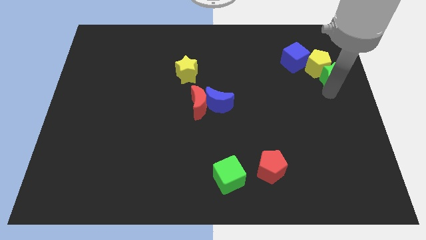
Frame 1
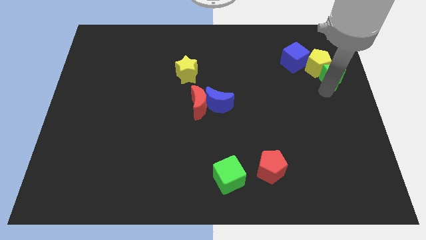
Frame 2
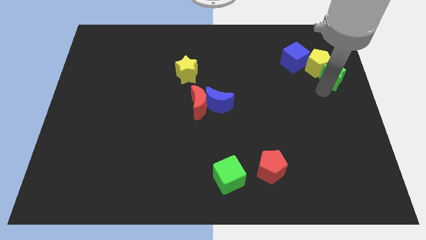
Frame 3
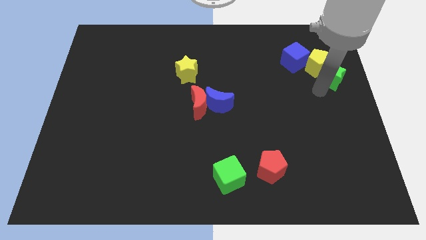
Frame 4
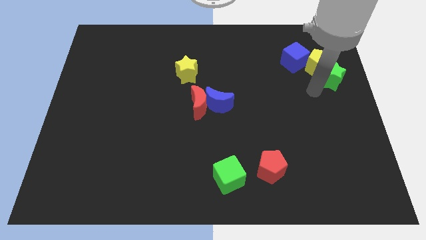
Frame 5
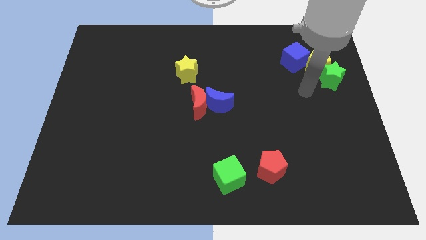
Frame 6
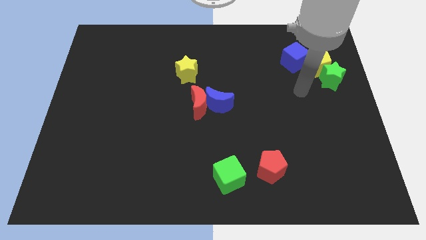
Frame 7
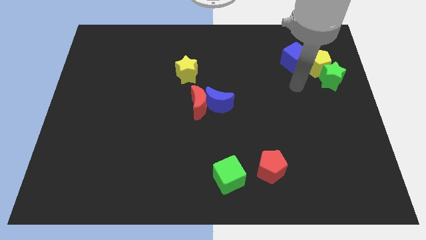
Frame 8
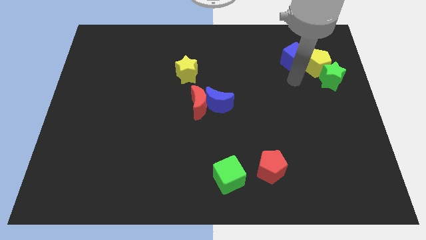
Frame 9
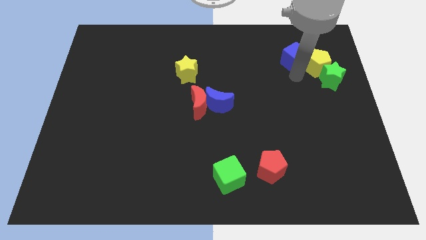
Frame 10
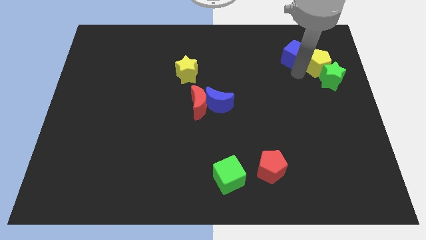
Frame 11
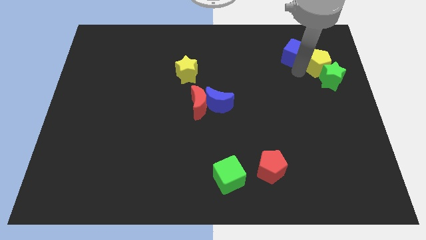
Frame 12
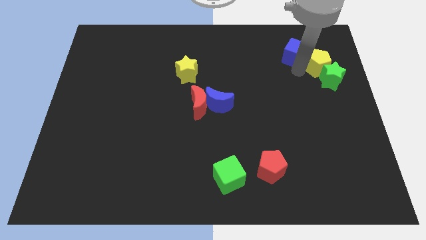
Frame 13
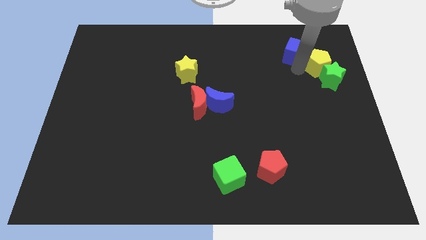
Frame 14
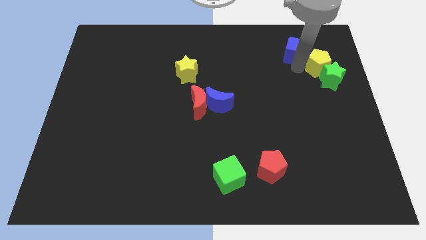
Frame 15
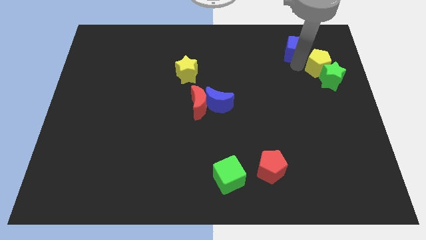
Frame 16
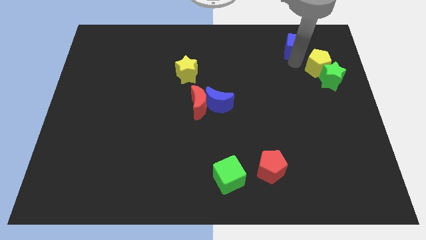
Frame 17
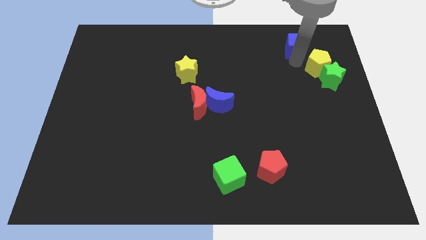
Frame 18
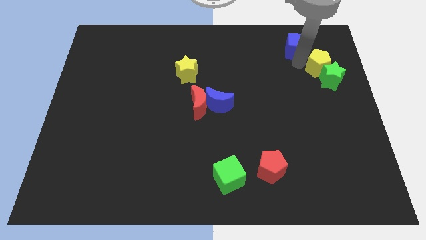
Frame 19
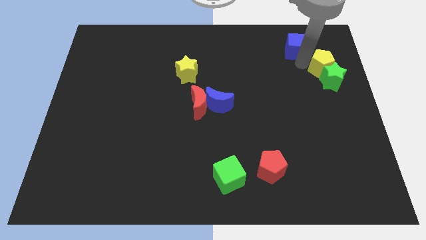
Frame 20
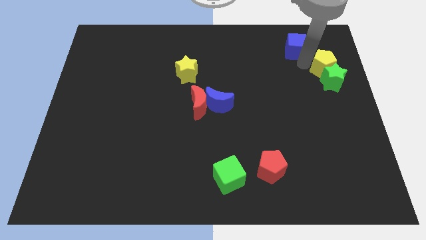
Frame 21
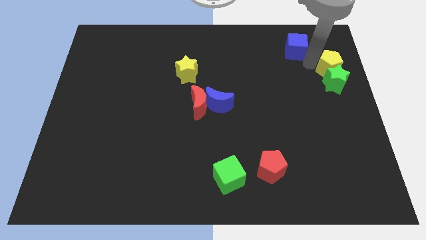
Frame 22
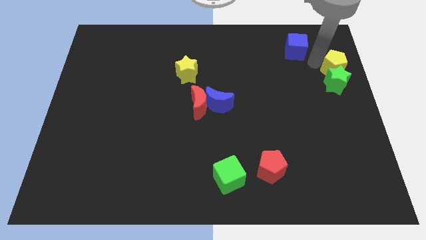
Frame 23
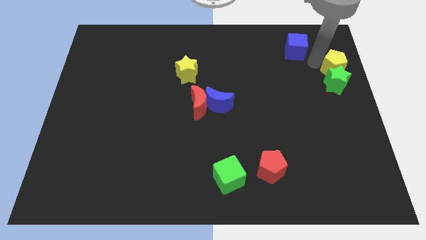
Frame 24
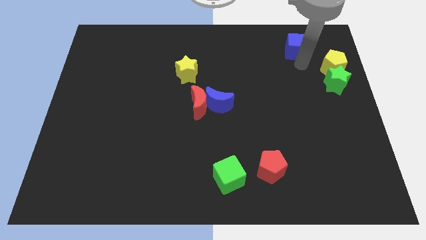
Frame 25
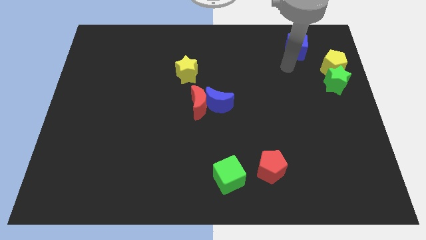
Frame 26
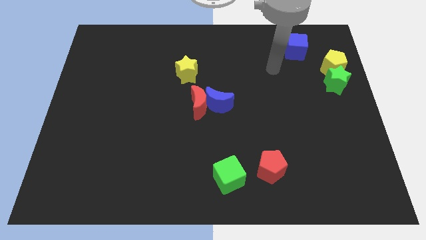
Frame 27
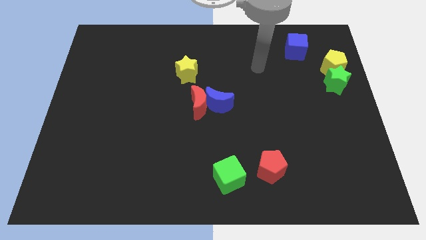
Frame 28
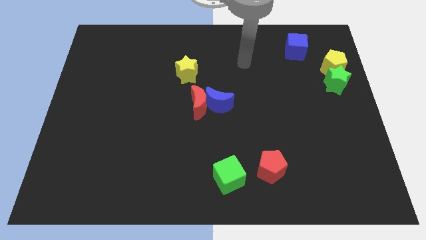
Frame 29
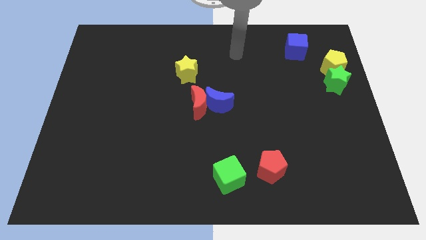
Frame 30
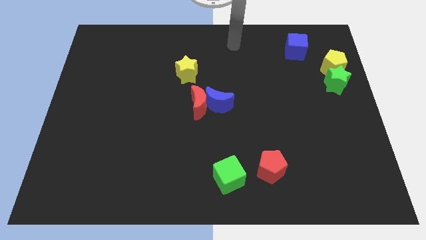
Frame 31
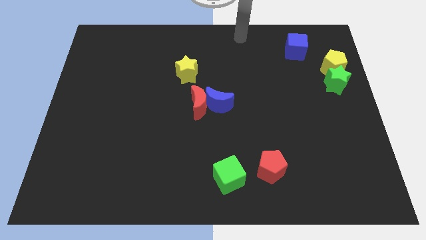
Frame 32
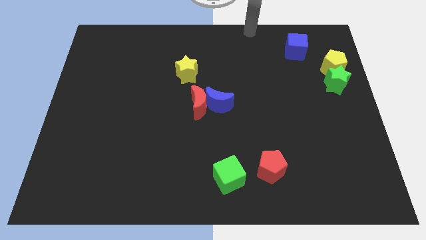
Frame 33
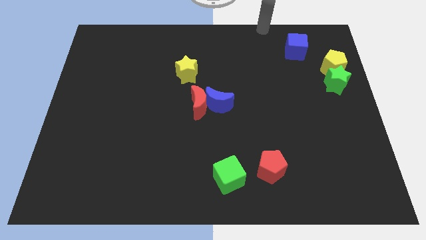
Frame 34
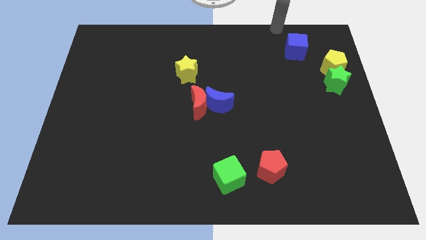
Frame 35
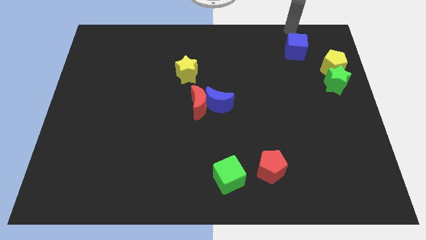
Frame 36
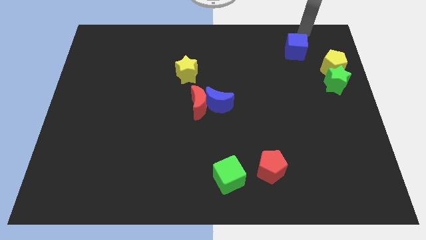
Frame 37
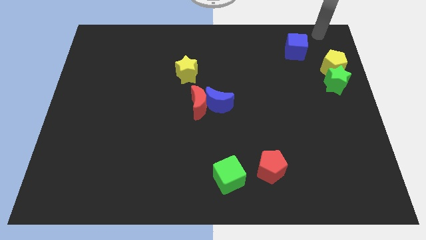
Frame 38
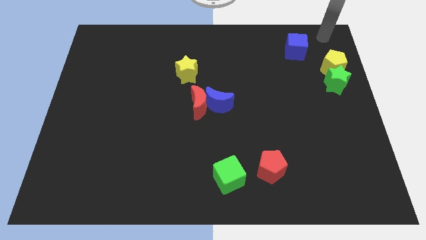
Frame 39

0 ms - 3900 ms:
separate the blue cube from the group of blocks

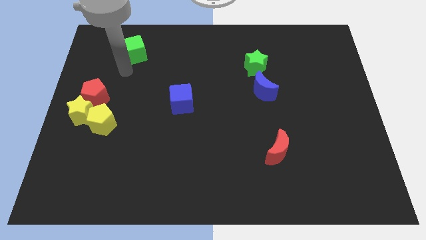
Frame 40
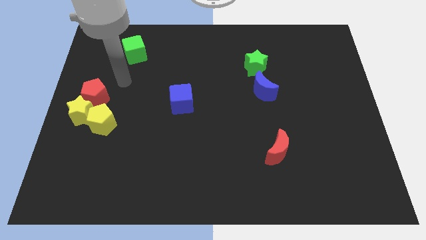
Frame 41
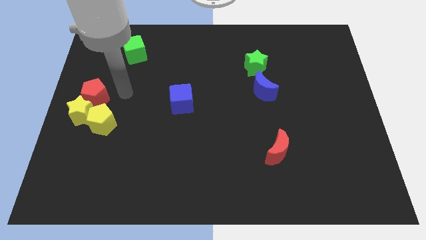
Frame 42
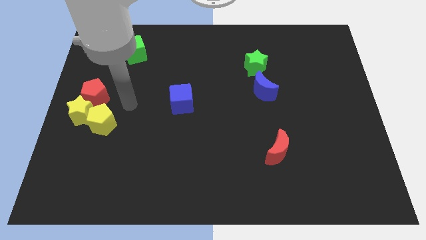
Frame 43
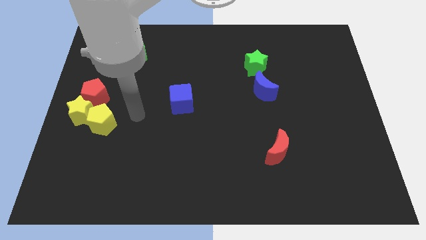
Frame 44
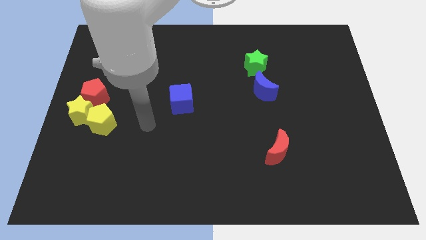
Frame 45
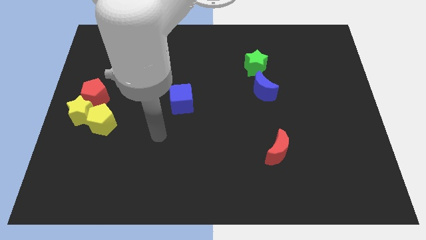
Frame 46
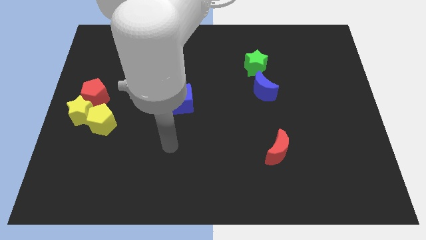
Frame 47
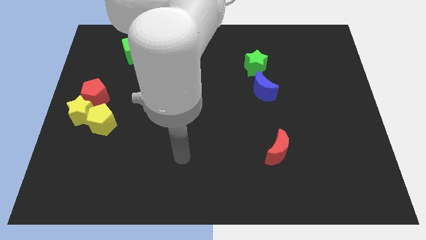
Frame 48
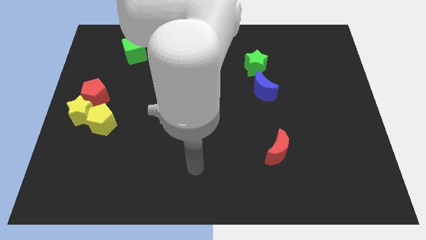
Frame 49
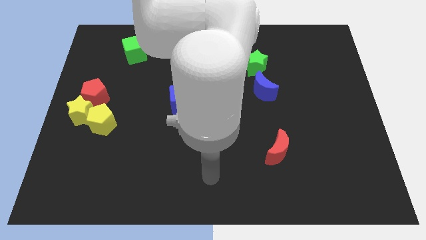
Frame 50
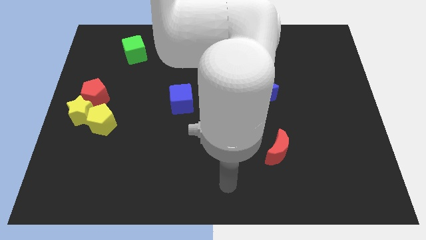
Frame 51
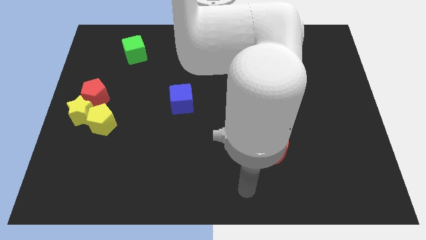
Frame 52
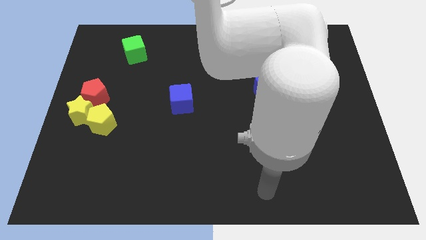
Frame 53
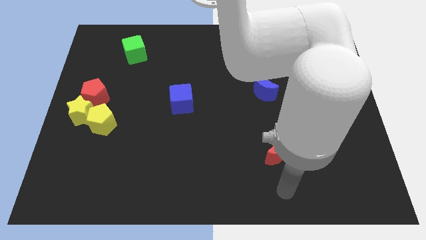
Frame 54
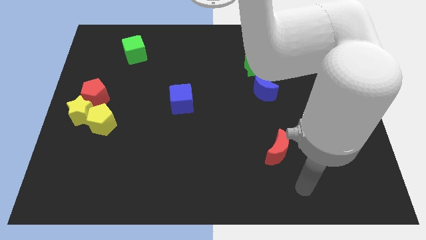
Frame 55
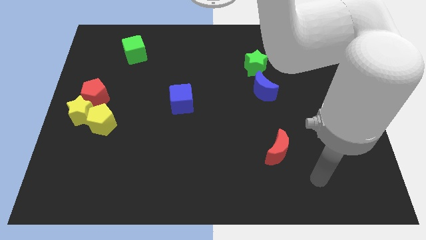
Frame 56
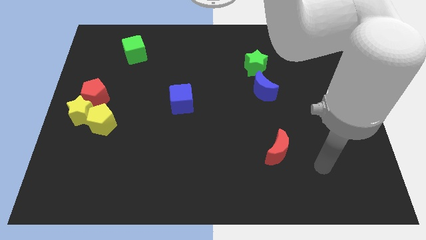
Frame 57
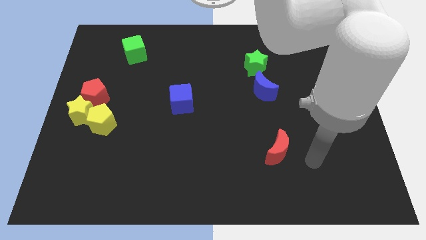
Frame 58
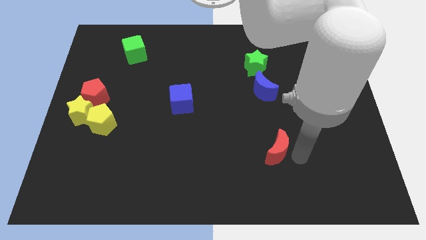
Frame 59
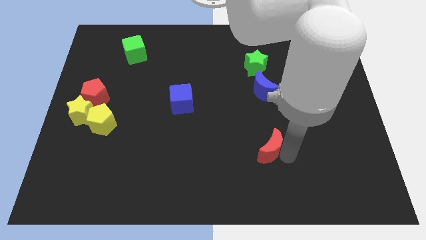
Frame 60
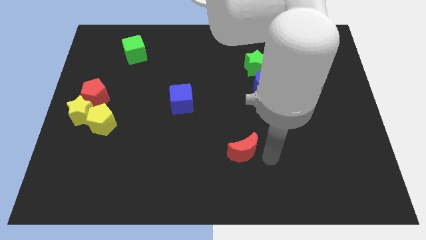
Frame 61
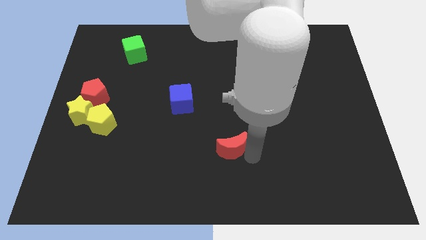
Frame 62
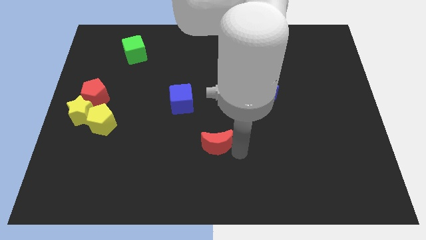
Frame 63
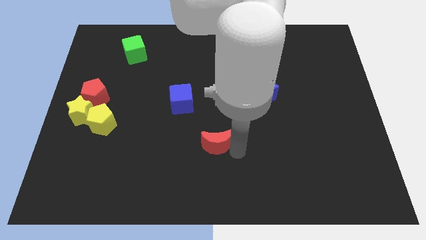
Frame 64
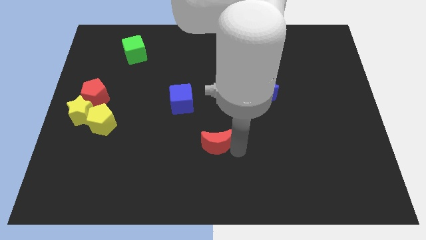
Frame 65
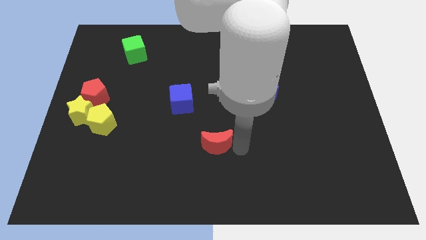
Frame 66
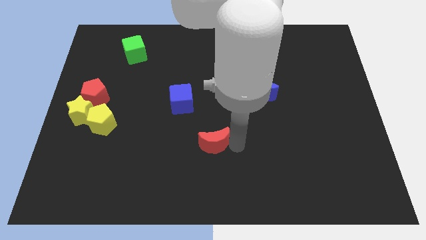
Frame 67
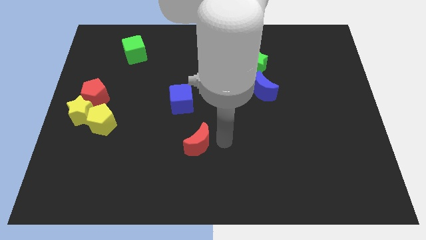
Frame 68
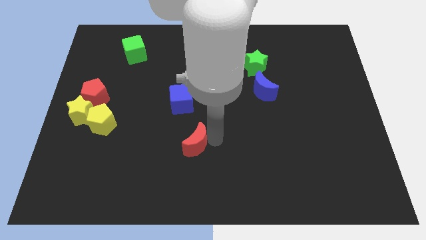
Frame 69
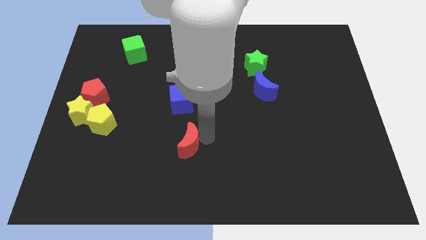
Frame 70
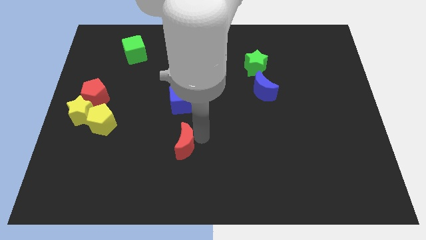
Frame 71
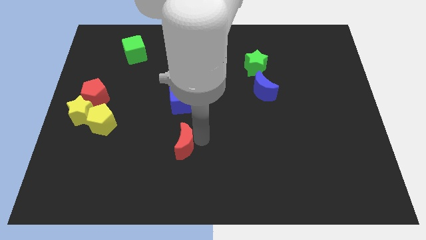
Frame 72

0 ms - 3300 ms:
place the red moon at the bottom of blue cube

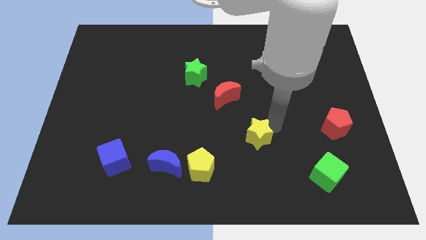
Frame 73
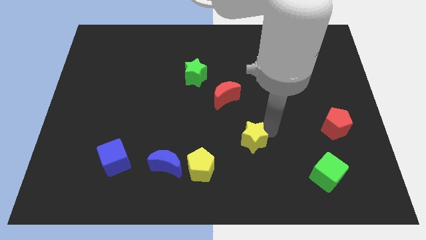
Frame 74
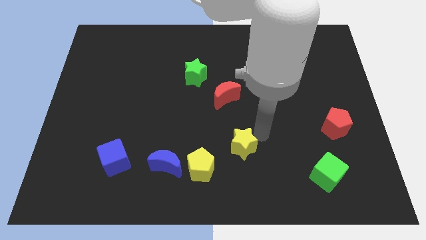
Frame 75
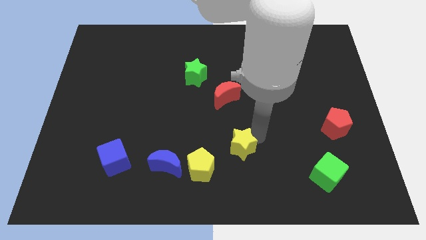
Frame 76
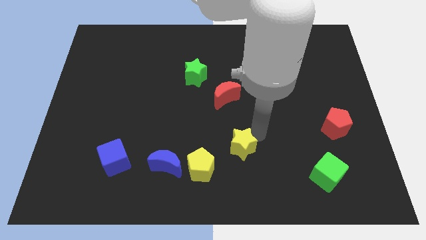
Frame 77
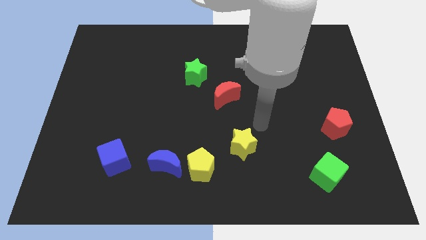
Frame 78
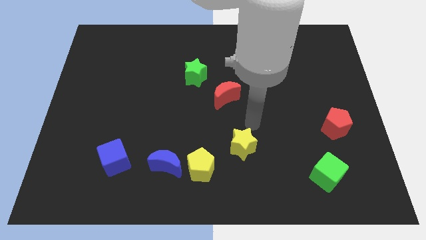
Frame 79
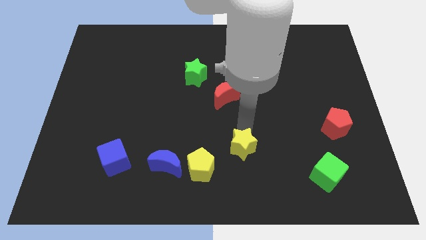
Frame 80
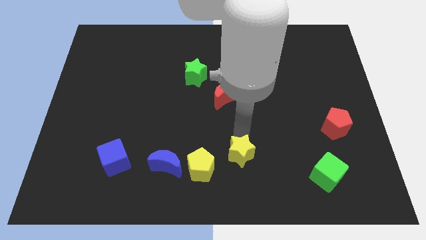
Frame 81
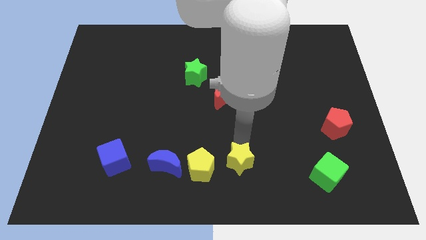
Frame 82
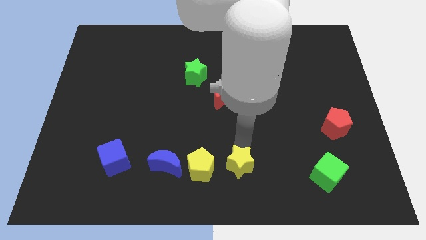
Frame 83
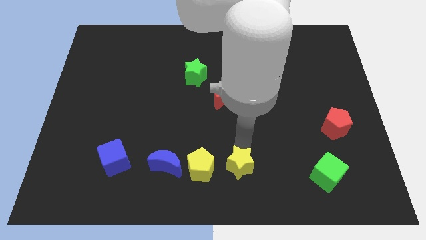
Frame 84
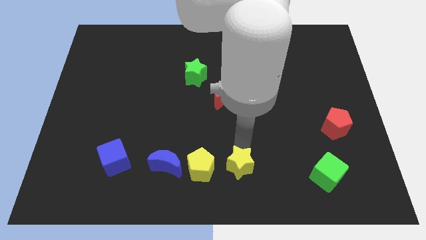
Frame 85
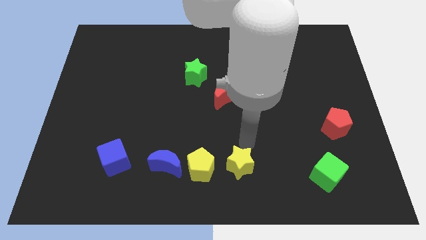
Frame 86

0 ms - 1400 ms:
place the yellow star towards right side of the yellow pentagon

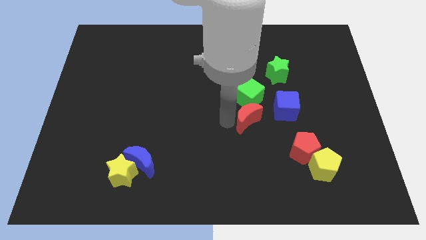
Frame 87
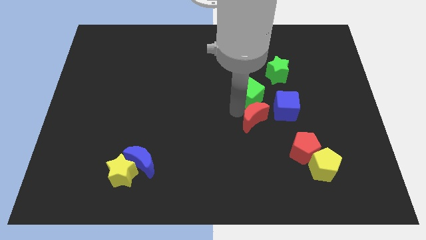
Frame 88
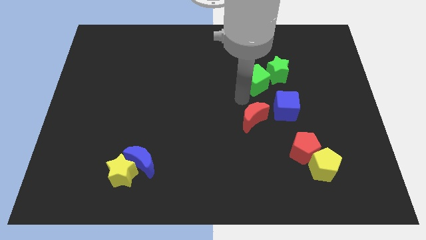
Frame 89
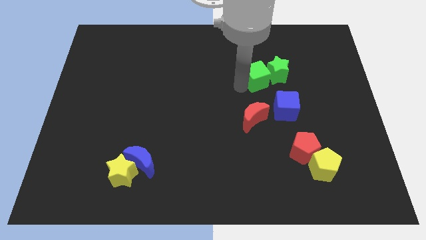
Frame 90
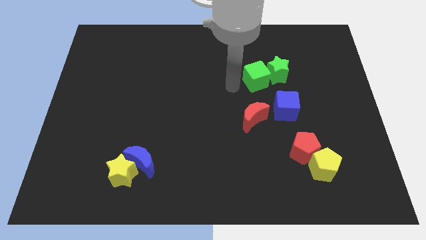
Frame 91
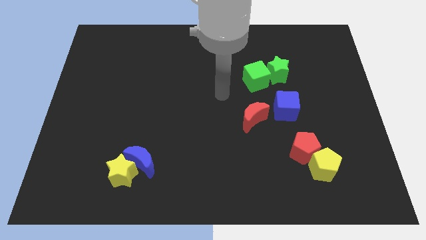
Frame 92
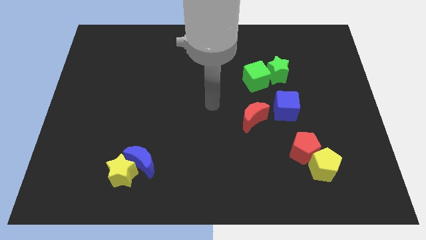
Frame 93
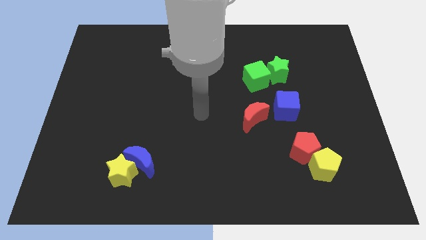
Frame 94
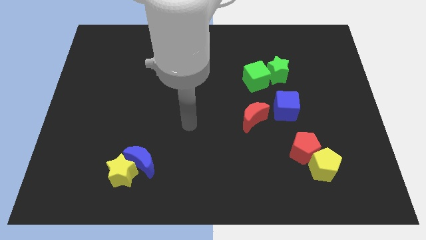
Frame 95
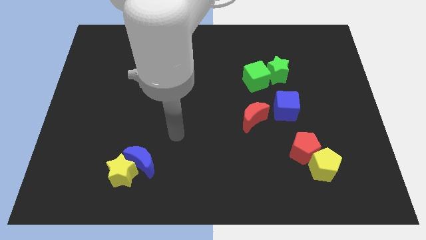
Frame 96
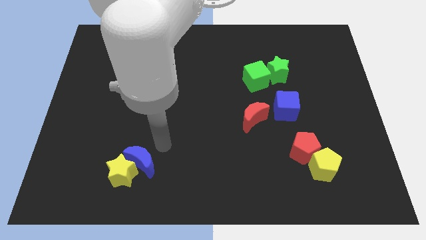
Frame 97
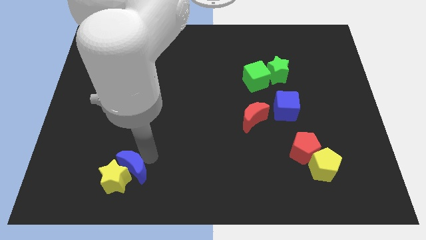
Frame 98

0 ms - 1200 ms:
separate red moon and the green cube
